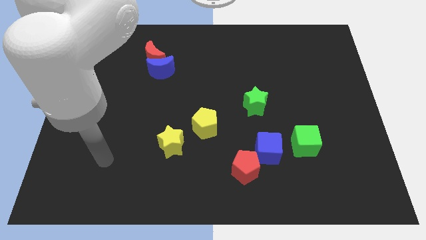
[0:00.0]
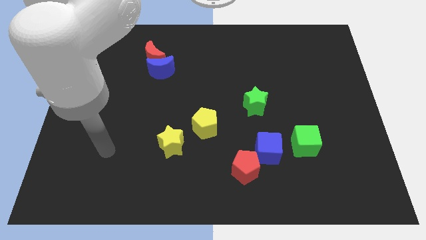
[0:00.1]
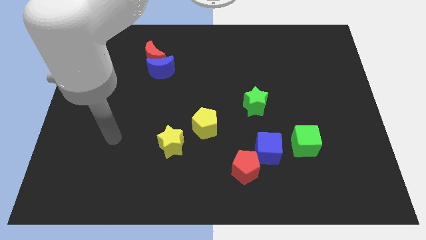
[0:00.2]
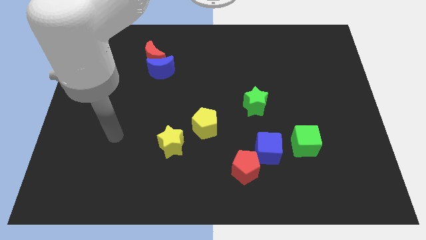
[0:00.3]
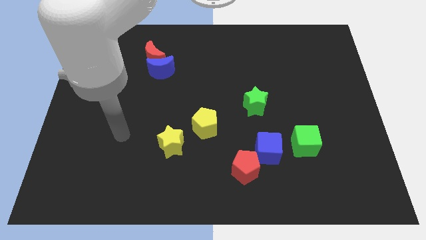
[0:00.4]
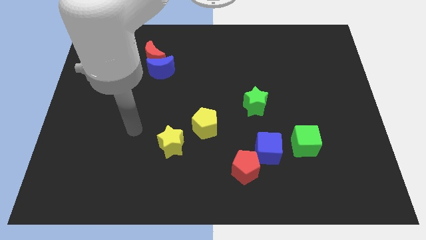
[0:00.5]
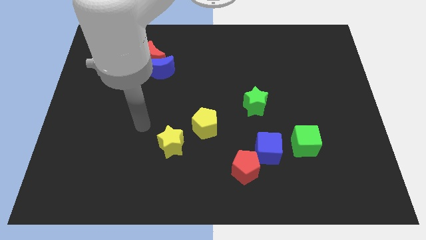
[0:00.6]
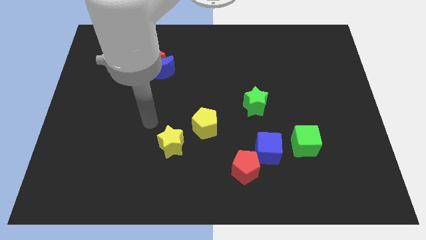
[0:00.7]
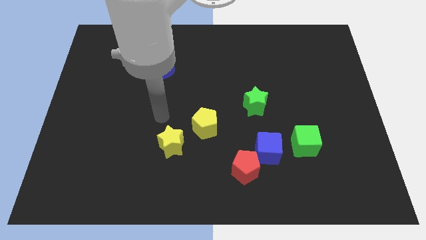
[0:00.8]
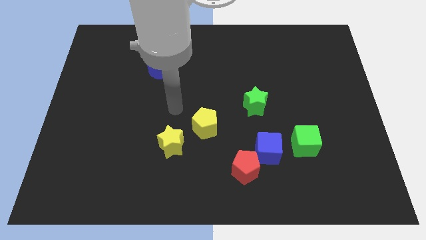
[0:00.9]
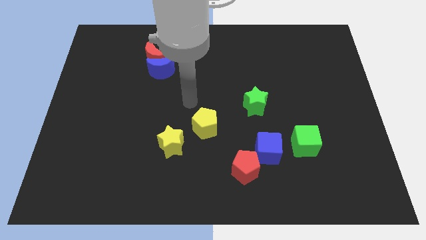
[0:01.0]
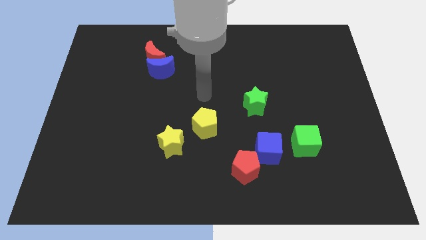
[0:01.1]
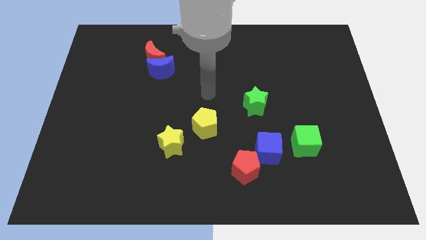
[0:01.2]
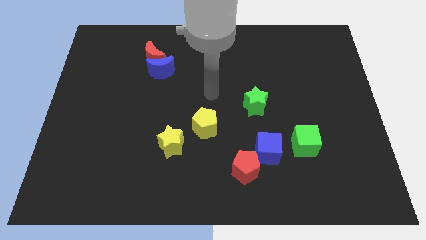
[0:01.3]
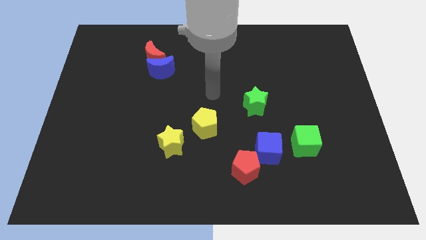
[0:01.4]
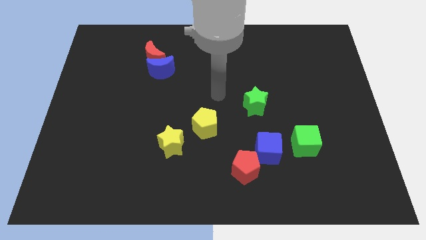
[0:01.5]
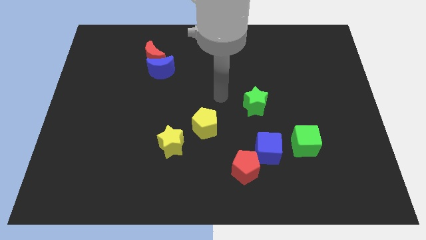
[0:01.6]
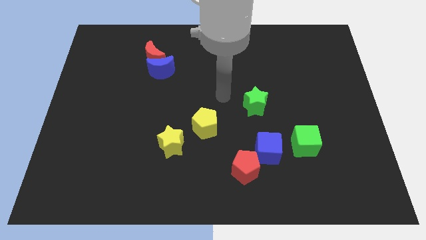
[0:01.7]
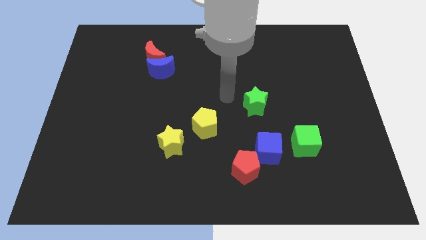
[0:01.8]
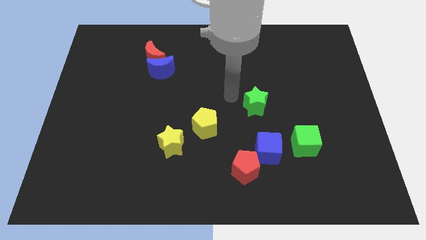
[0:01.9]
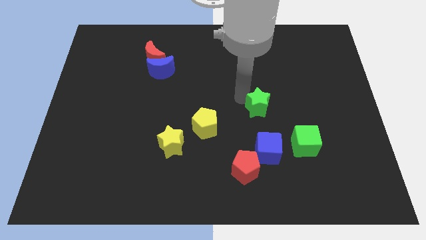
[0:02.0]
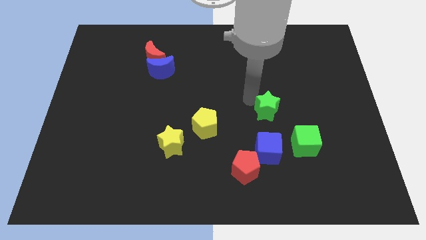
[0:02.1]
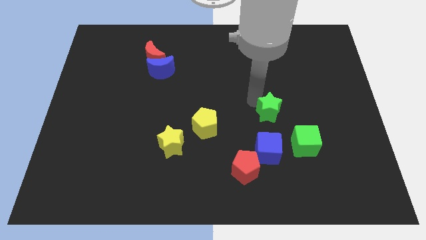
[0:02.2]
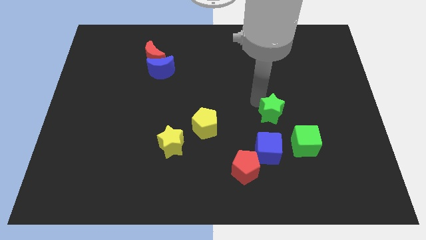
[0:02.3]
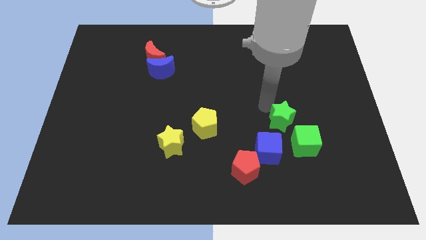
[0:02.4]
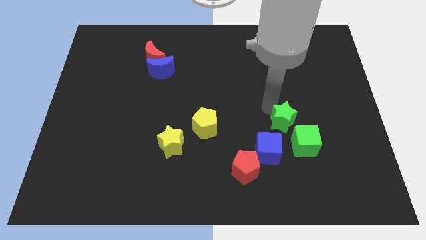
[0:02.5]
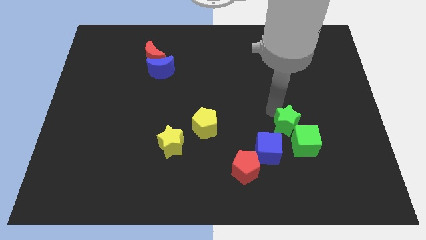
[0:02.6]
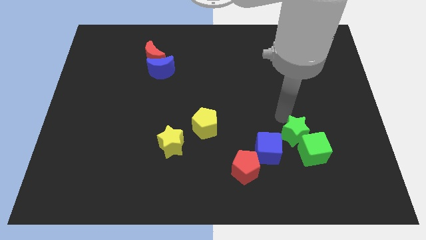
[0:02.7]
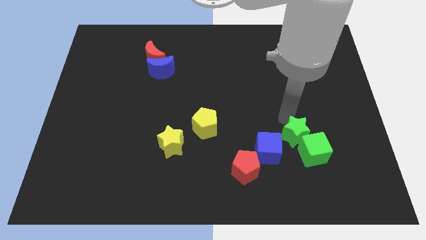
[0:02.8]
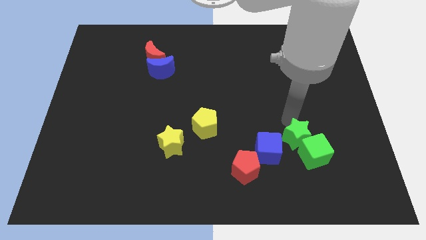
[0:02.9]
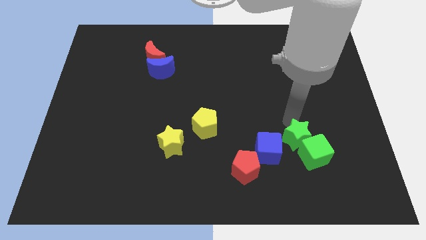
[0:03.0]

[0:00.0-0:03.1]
group up the green color blocks at the right of the blue cube

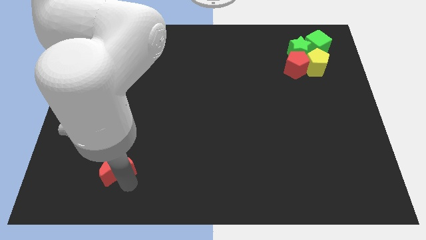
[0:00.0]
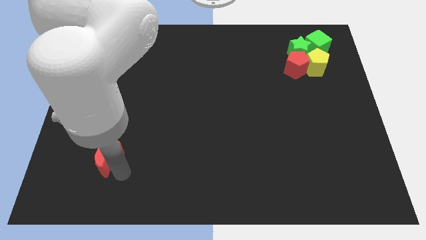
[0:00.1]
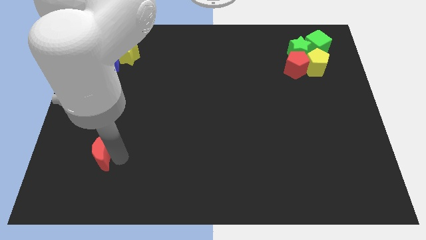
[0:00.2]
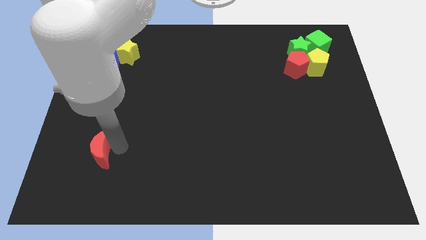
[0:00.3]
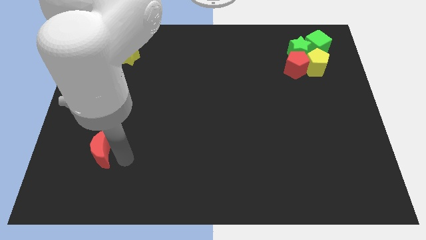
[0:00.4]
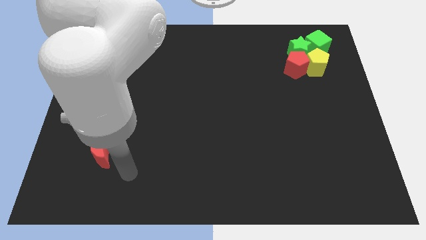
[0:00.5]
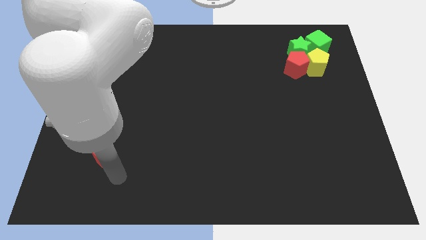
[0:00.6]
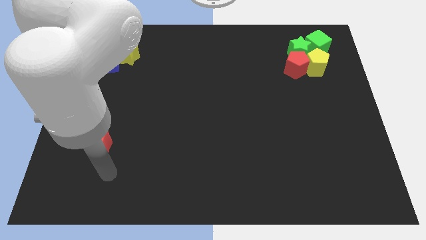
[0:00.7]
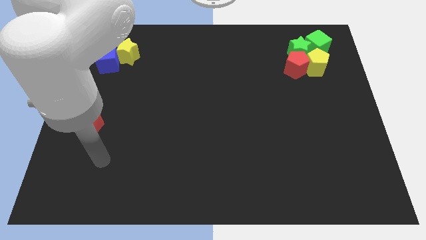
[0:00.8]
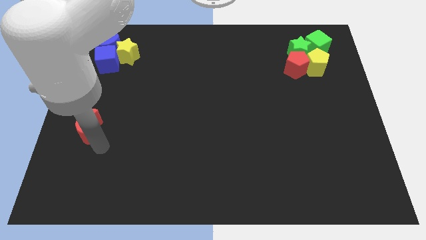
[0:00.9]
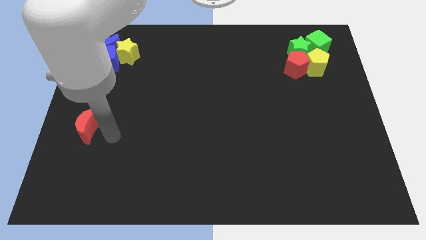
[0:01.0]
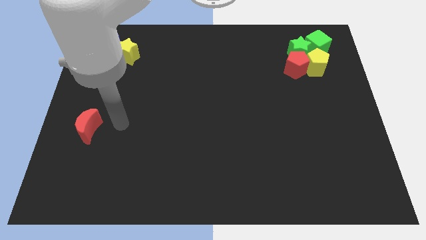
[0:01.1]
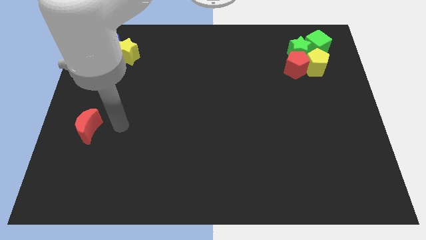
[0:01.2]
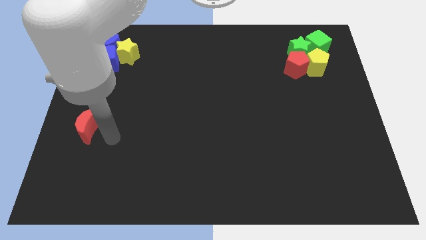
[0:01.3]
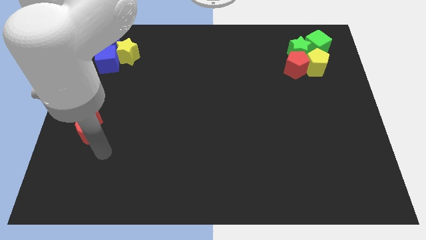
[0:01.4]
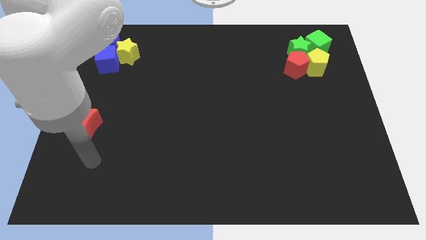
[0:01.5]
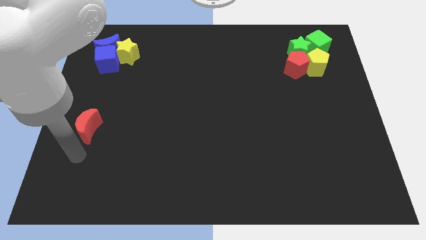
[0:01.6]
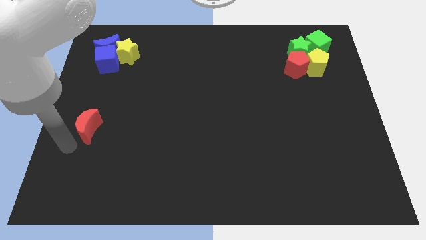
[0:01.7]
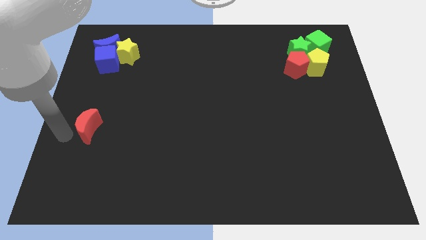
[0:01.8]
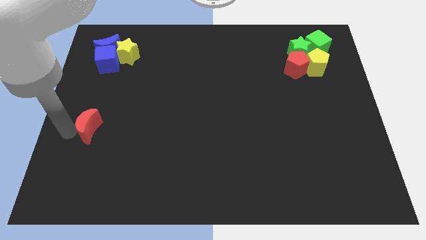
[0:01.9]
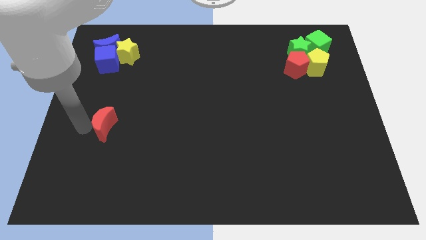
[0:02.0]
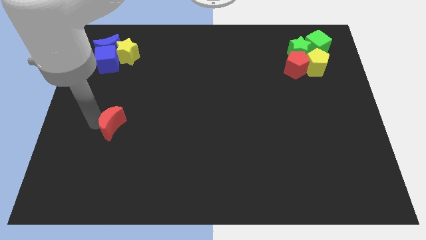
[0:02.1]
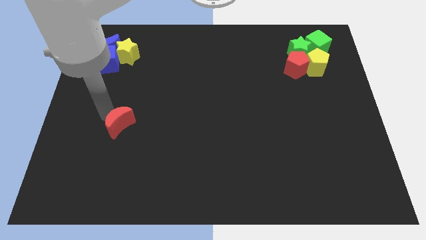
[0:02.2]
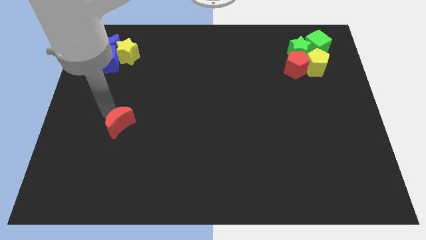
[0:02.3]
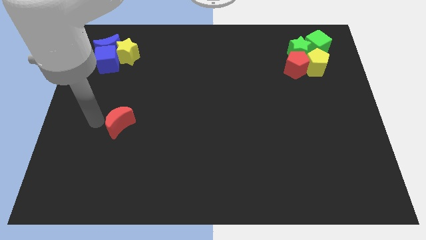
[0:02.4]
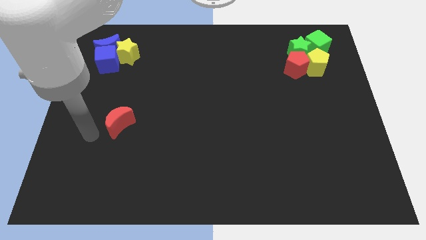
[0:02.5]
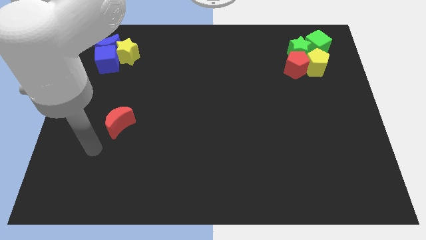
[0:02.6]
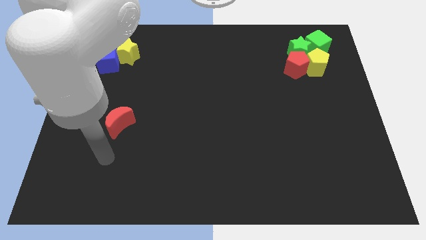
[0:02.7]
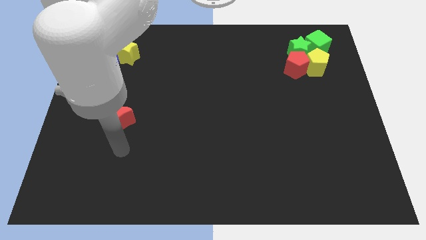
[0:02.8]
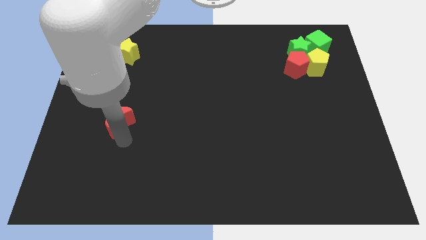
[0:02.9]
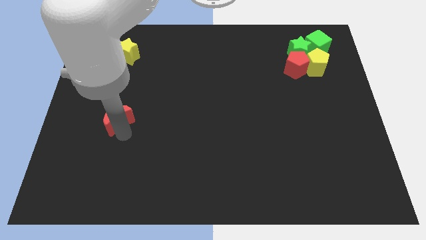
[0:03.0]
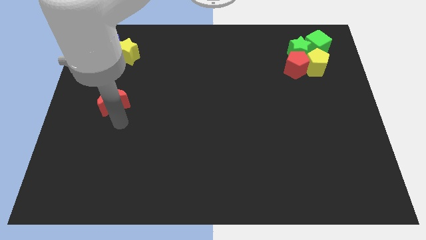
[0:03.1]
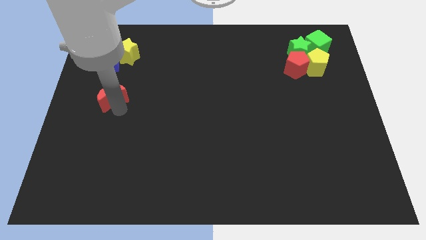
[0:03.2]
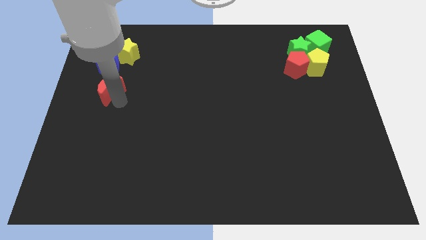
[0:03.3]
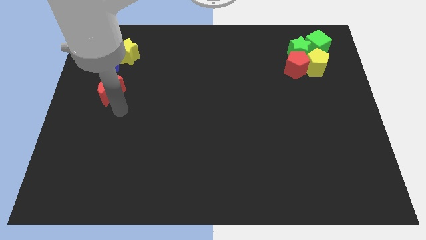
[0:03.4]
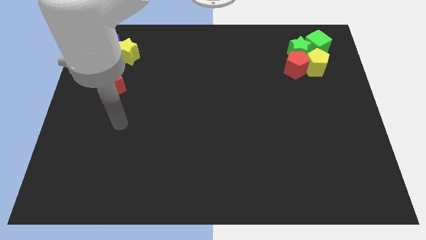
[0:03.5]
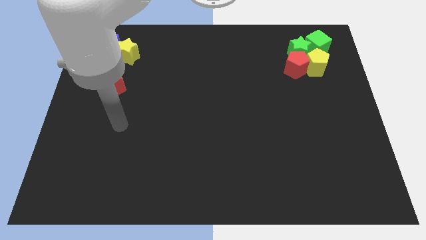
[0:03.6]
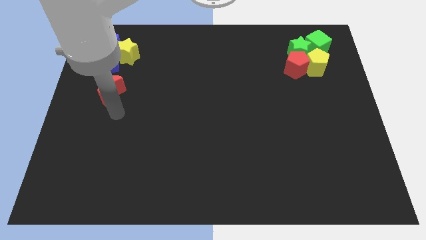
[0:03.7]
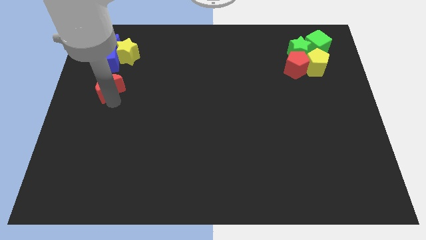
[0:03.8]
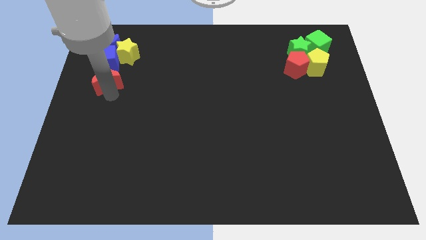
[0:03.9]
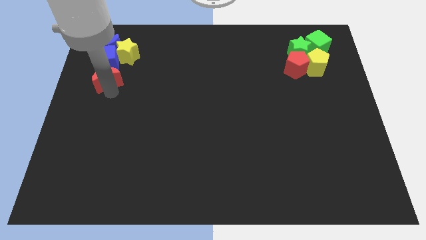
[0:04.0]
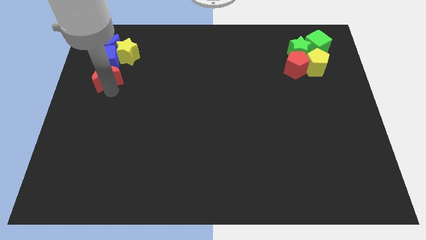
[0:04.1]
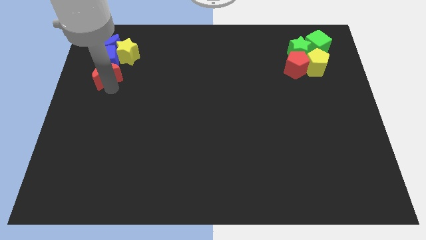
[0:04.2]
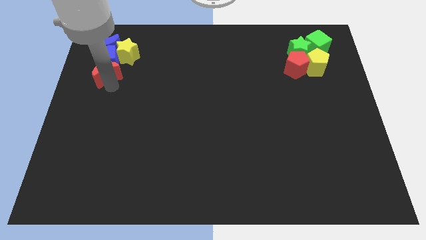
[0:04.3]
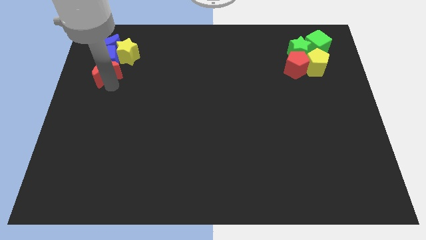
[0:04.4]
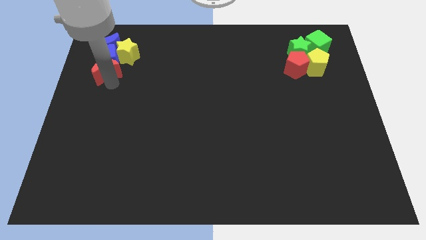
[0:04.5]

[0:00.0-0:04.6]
push the red moon into the blue cube

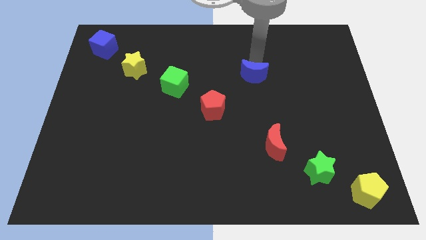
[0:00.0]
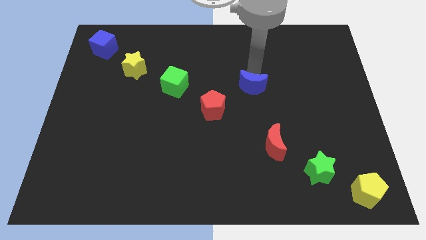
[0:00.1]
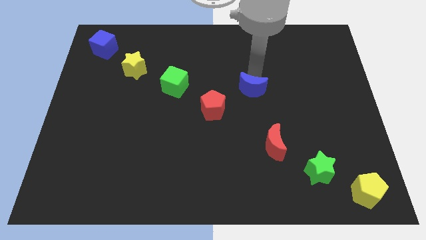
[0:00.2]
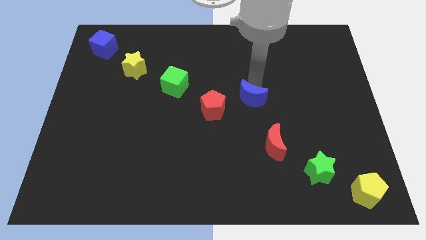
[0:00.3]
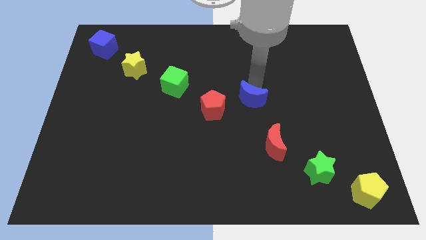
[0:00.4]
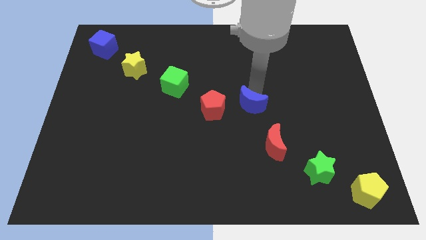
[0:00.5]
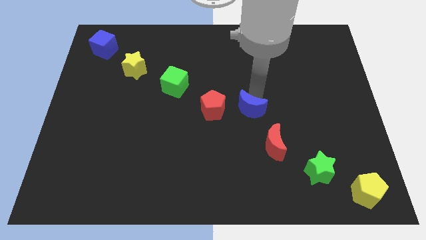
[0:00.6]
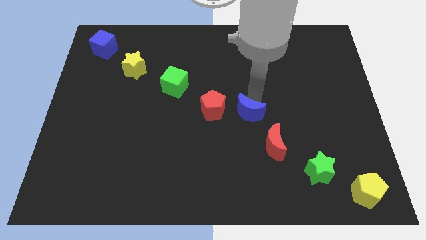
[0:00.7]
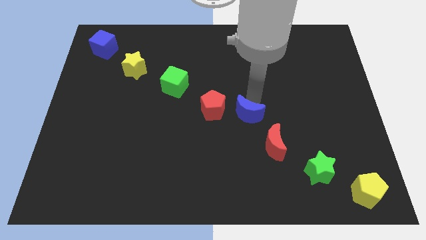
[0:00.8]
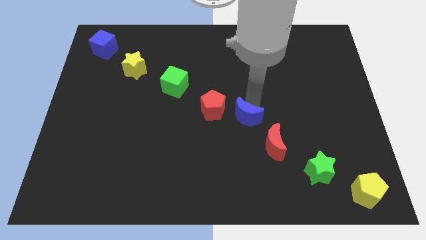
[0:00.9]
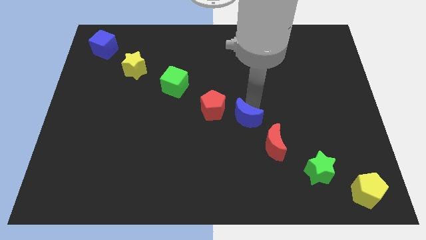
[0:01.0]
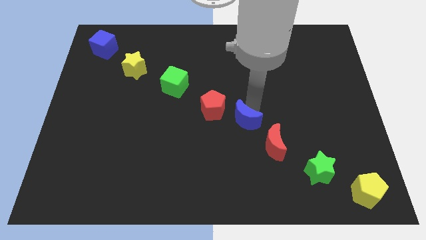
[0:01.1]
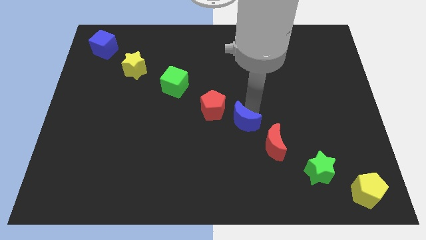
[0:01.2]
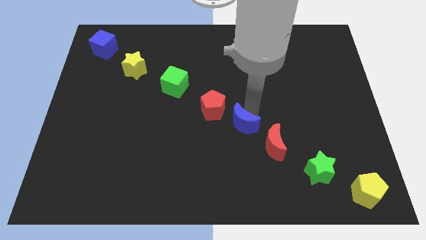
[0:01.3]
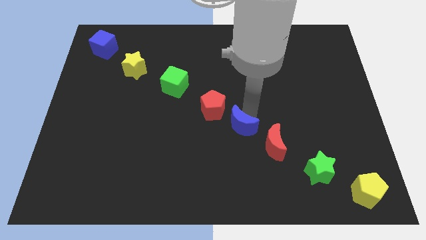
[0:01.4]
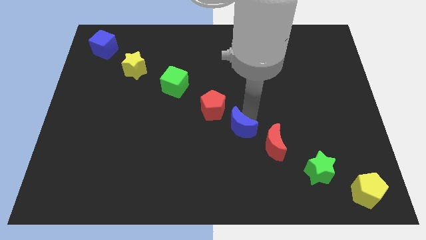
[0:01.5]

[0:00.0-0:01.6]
place the blue crescent in between the red crescent and the yellow pentagon
